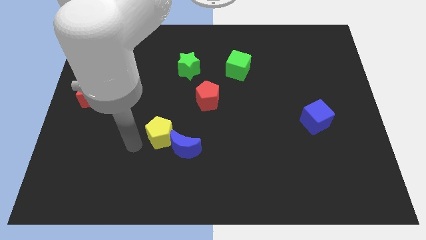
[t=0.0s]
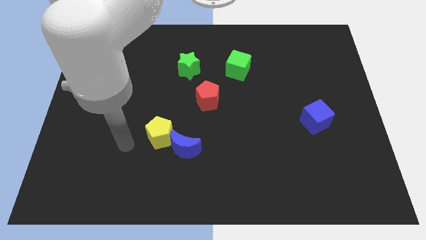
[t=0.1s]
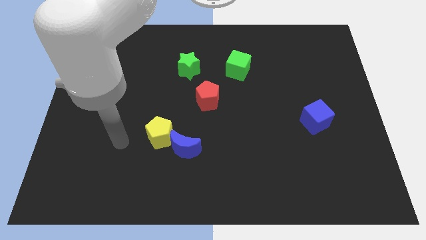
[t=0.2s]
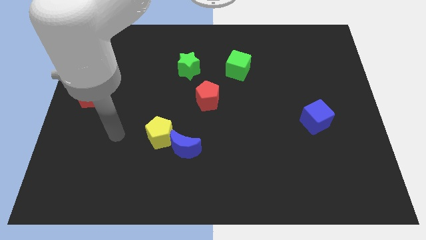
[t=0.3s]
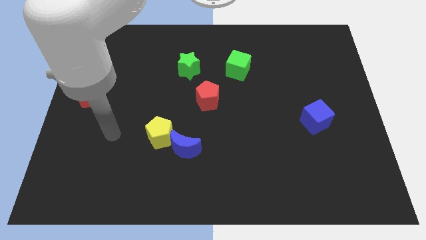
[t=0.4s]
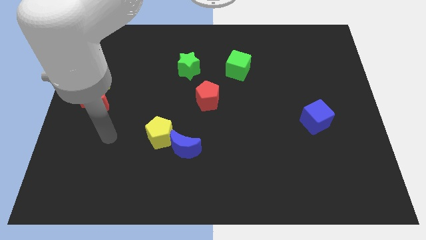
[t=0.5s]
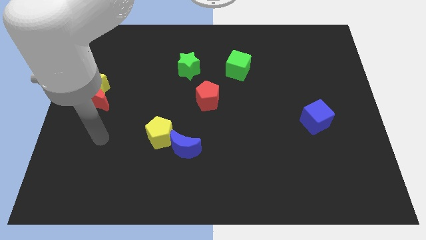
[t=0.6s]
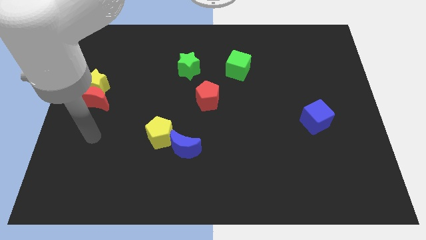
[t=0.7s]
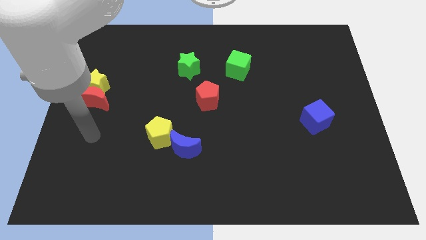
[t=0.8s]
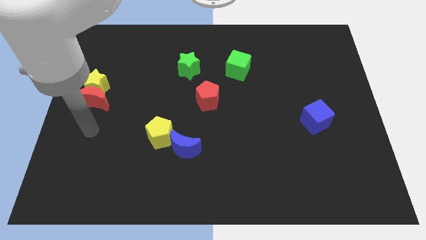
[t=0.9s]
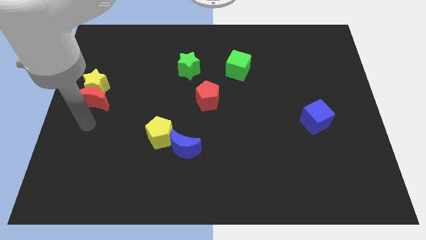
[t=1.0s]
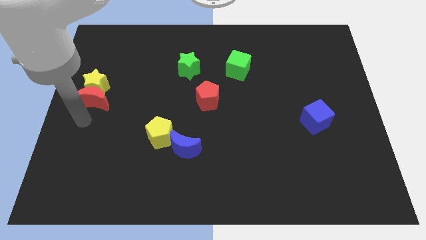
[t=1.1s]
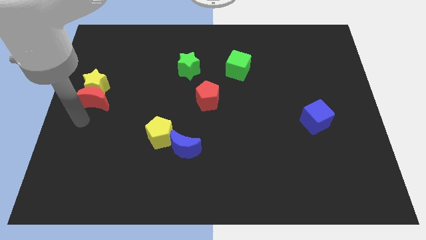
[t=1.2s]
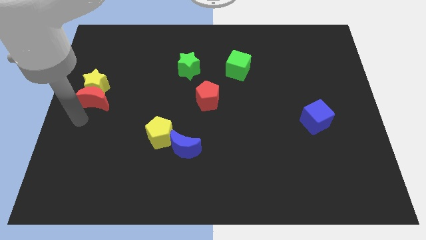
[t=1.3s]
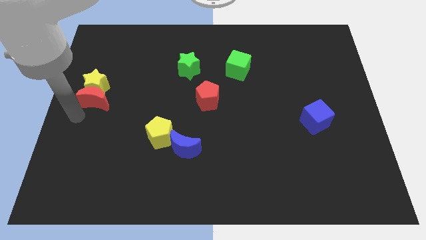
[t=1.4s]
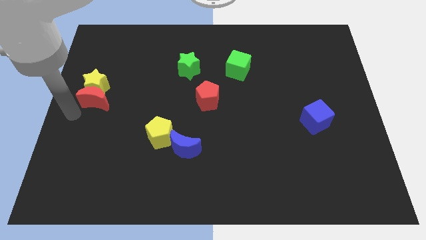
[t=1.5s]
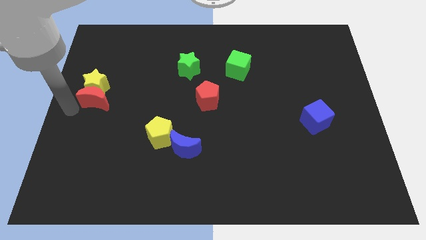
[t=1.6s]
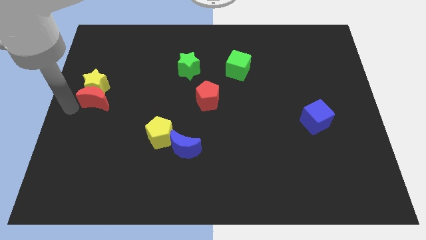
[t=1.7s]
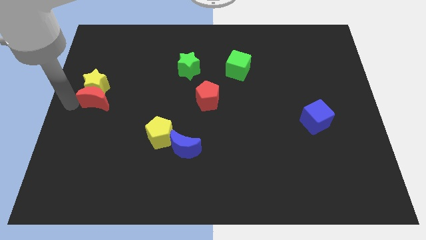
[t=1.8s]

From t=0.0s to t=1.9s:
point your arm towards the left side of the red moon

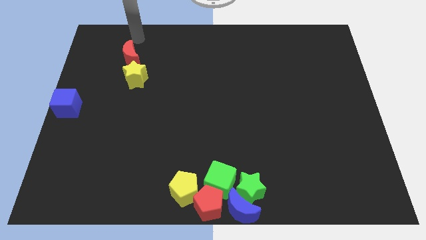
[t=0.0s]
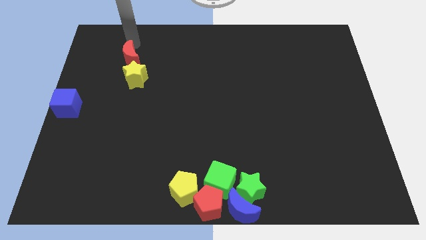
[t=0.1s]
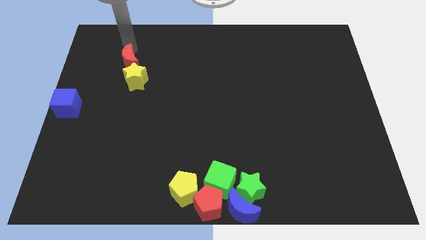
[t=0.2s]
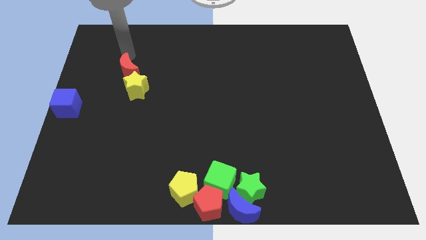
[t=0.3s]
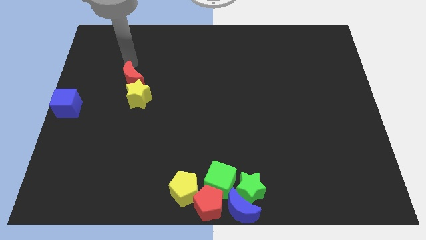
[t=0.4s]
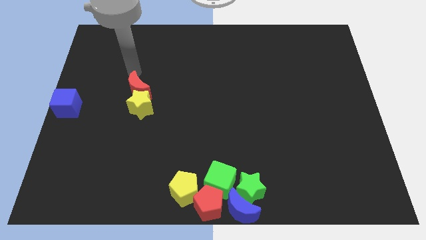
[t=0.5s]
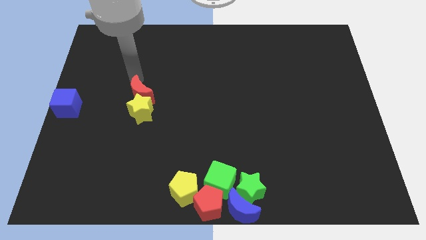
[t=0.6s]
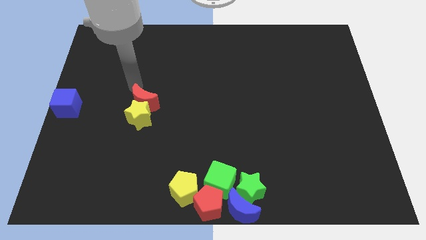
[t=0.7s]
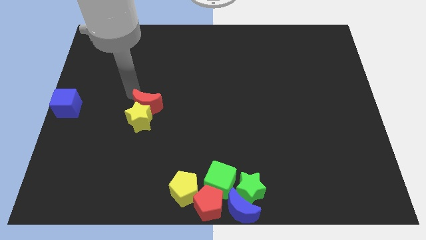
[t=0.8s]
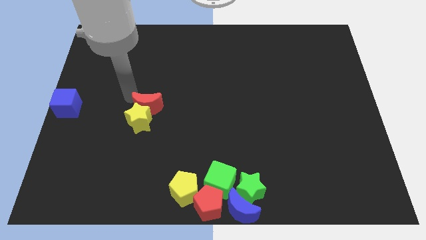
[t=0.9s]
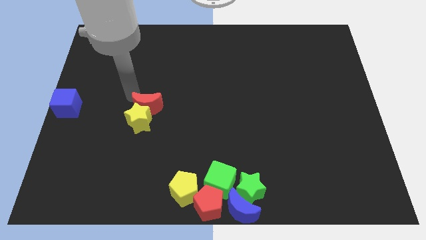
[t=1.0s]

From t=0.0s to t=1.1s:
drag the red moon and yellow star to the center left

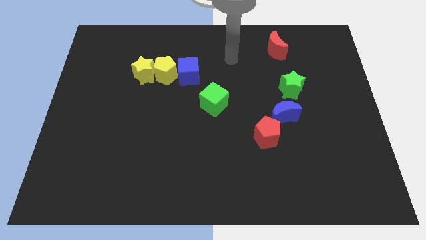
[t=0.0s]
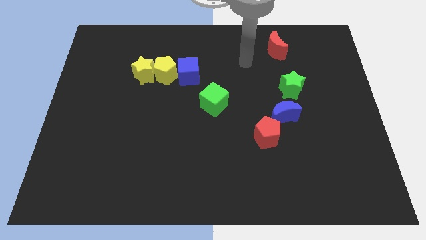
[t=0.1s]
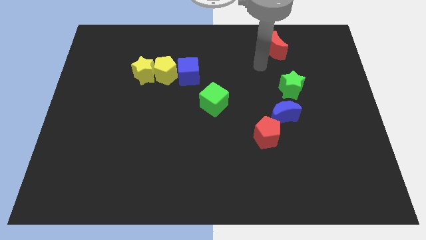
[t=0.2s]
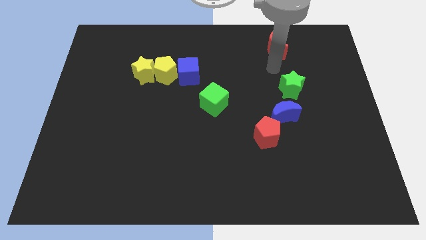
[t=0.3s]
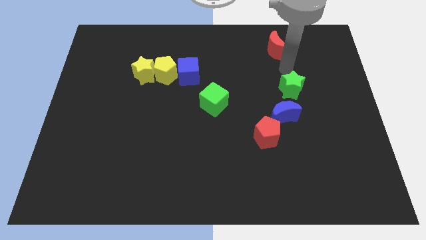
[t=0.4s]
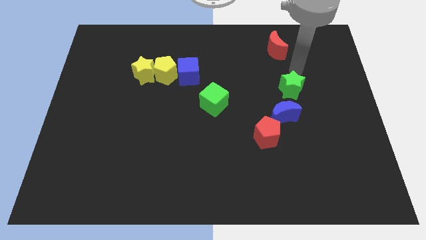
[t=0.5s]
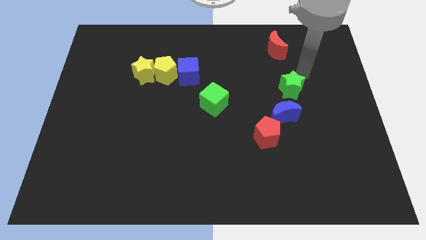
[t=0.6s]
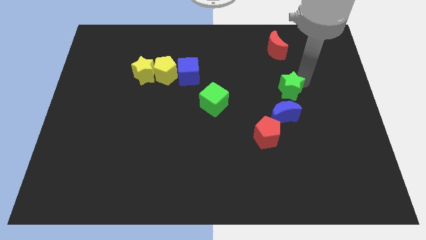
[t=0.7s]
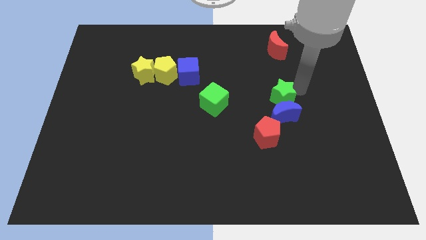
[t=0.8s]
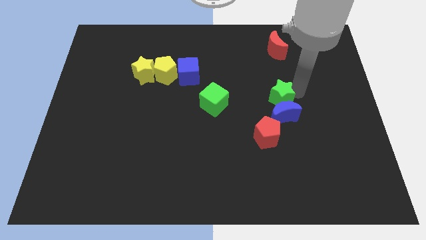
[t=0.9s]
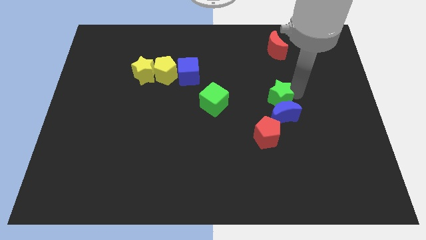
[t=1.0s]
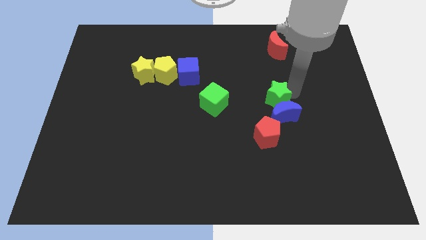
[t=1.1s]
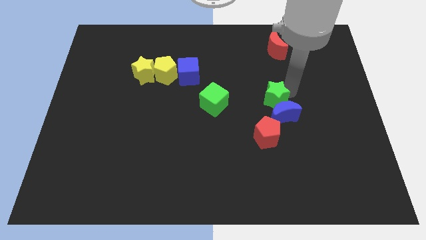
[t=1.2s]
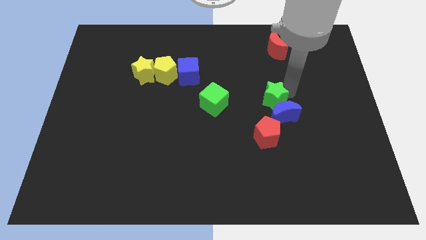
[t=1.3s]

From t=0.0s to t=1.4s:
push the green star into the blue moon

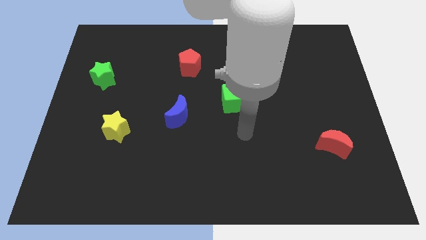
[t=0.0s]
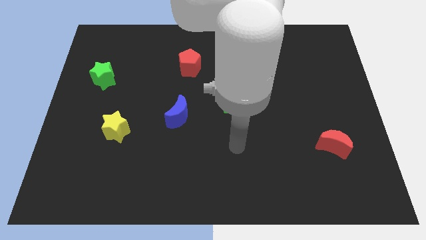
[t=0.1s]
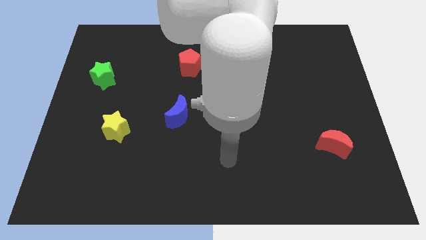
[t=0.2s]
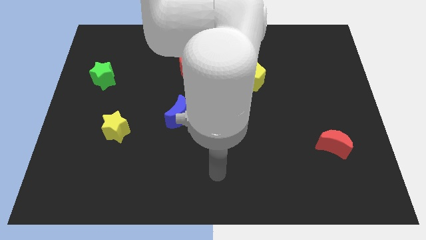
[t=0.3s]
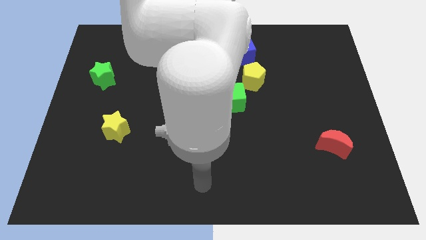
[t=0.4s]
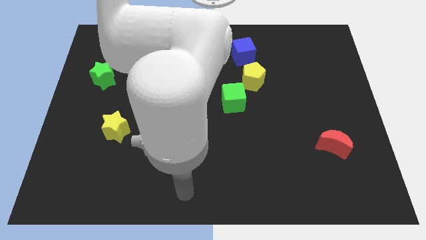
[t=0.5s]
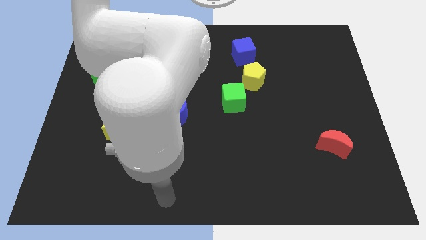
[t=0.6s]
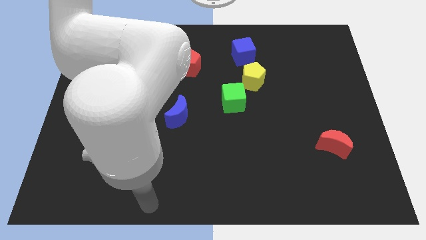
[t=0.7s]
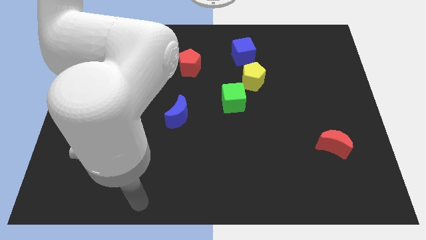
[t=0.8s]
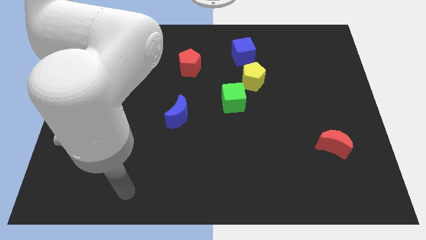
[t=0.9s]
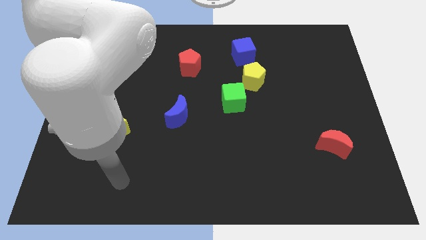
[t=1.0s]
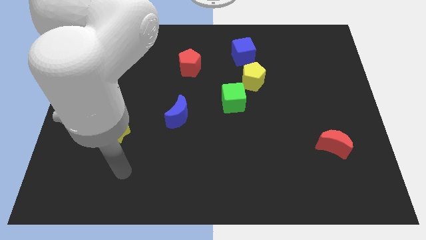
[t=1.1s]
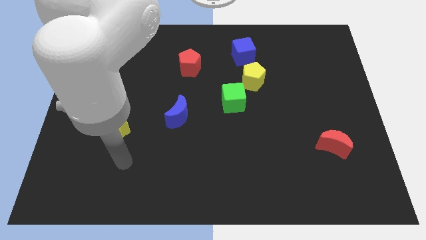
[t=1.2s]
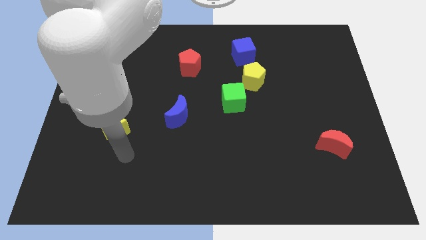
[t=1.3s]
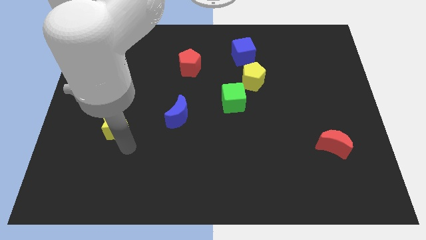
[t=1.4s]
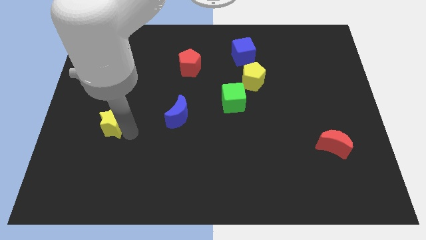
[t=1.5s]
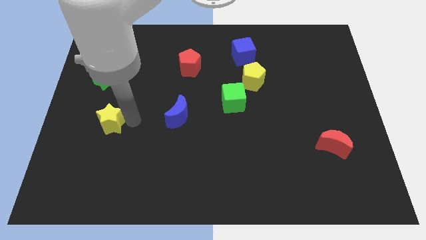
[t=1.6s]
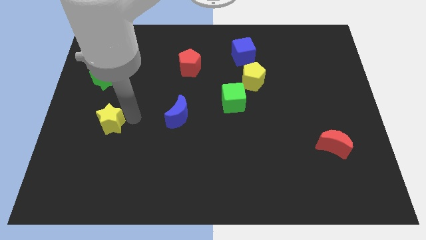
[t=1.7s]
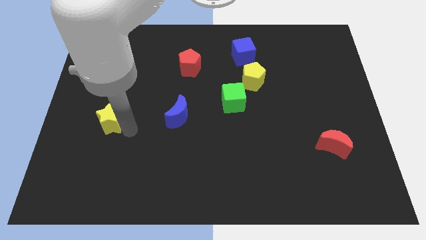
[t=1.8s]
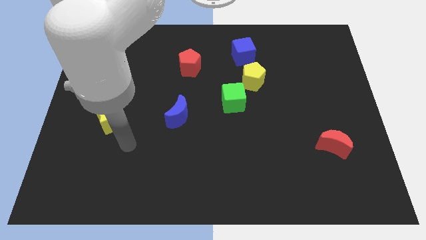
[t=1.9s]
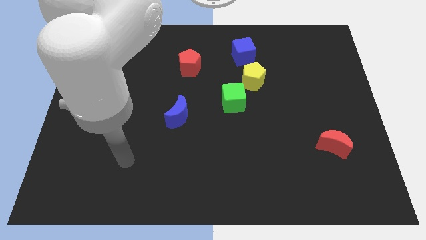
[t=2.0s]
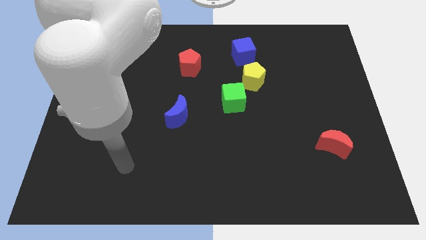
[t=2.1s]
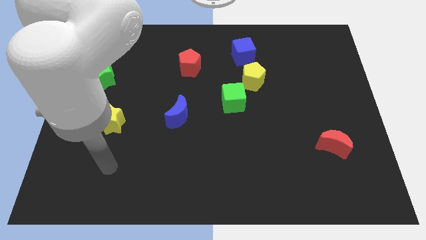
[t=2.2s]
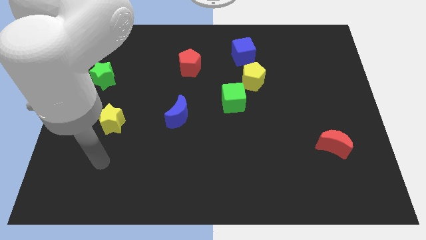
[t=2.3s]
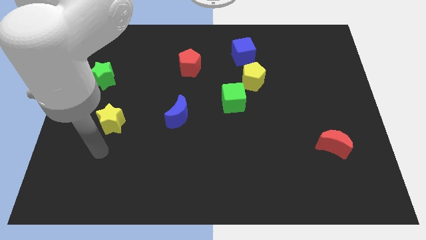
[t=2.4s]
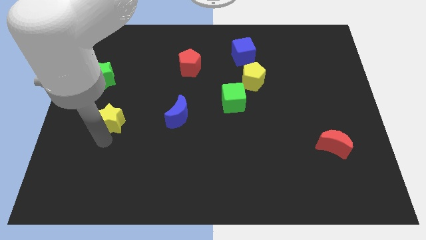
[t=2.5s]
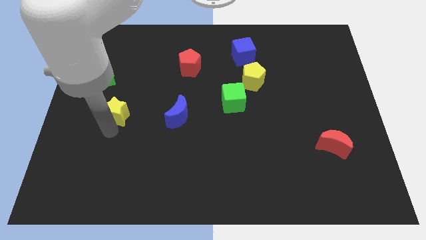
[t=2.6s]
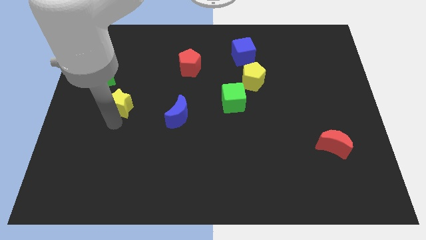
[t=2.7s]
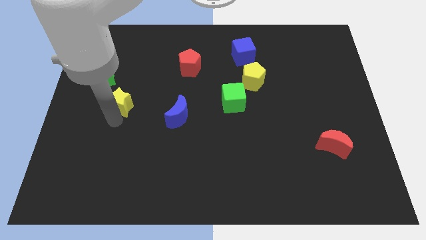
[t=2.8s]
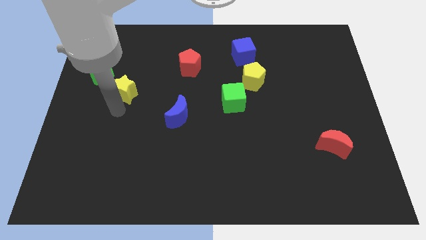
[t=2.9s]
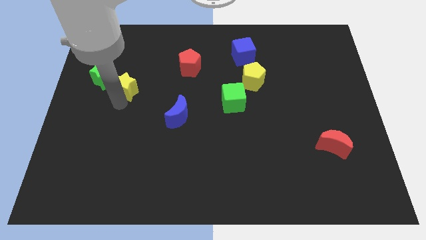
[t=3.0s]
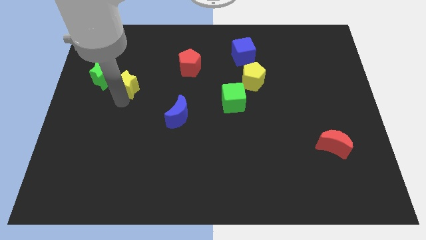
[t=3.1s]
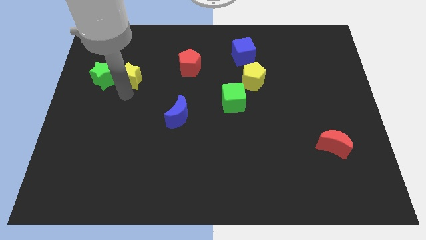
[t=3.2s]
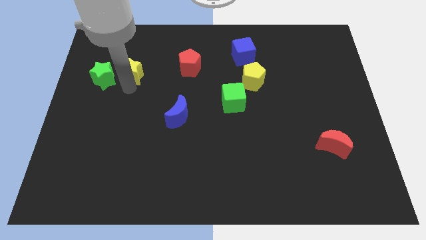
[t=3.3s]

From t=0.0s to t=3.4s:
move the yellow star to the right of the green star

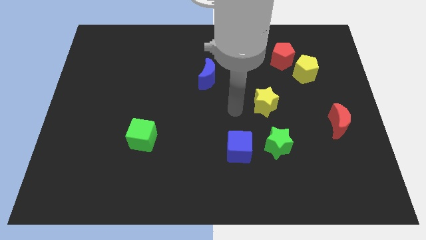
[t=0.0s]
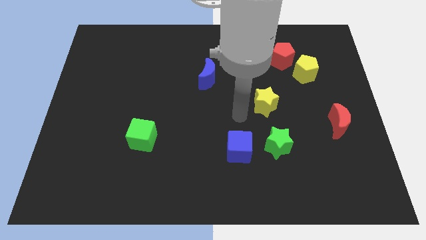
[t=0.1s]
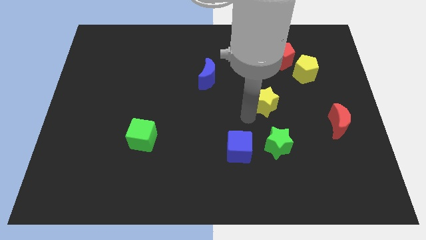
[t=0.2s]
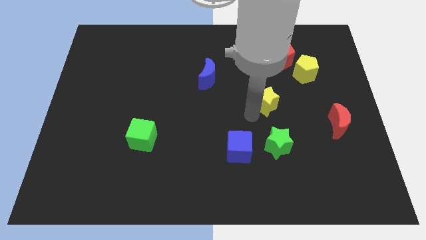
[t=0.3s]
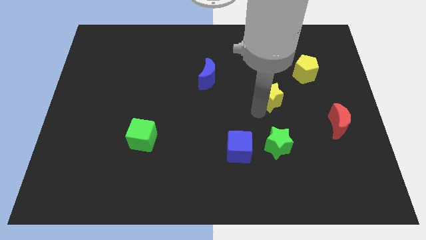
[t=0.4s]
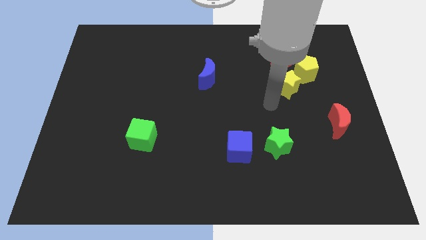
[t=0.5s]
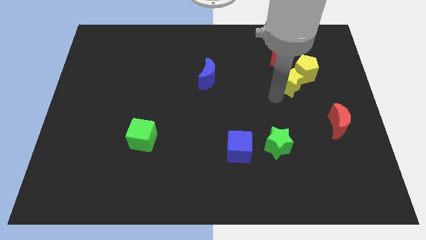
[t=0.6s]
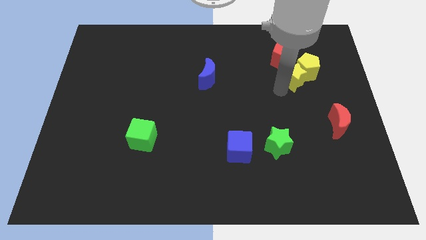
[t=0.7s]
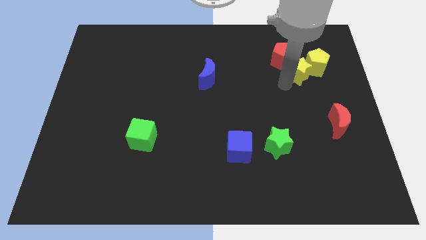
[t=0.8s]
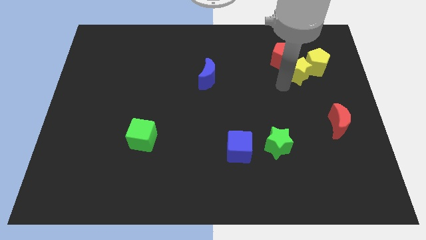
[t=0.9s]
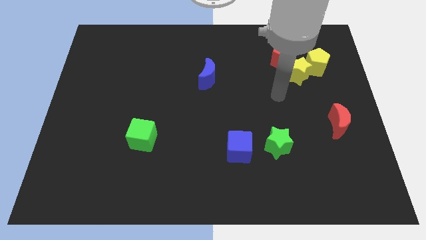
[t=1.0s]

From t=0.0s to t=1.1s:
push the yellow star into the yellow pentagon
